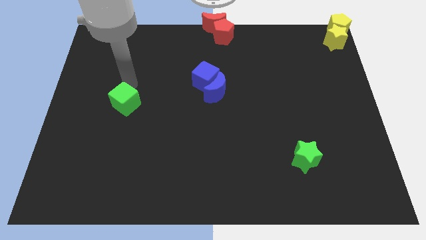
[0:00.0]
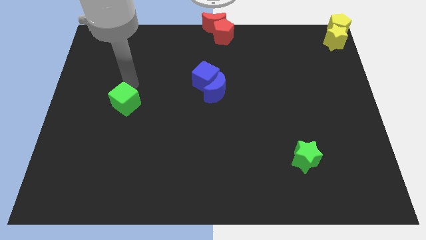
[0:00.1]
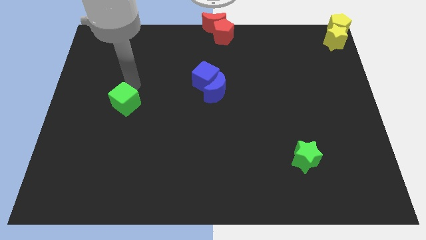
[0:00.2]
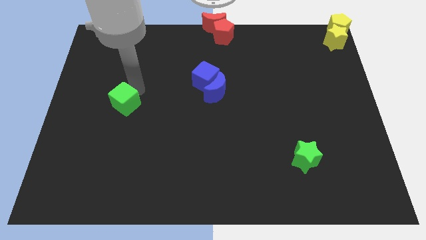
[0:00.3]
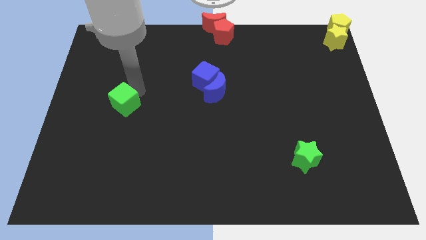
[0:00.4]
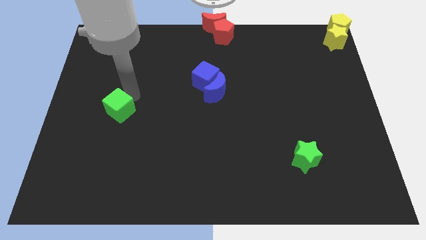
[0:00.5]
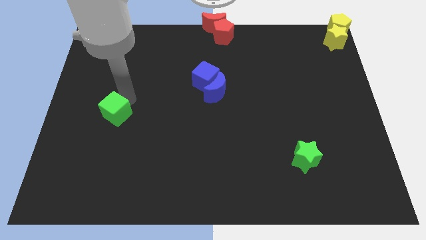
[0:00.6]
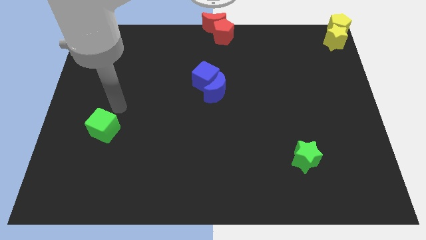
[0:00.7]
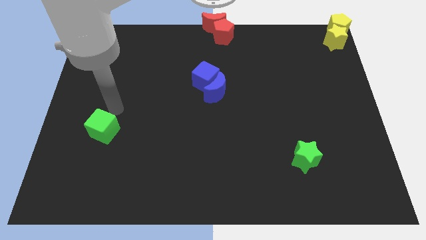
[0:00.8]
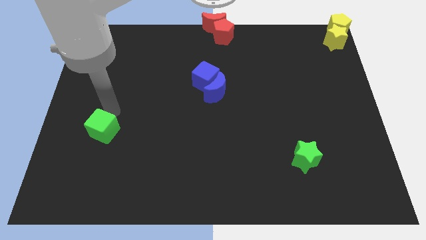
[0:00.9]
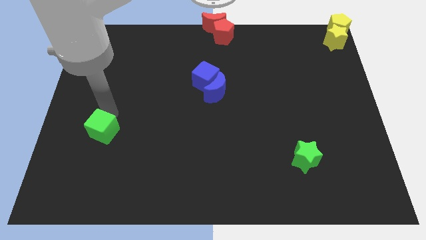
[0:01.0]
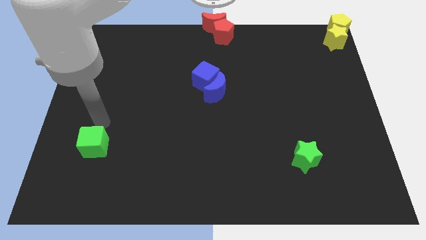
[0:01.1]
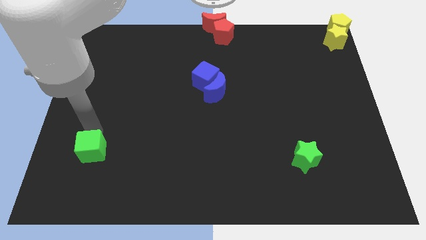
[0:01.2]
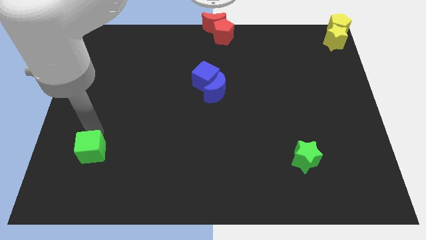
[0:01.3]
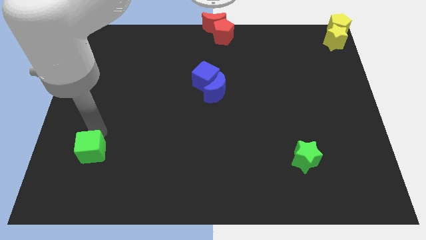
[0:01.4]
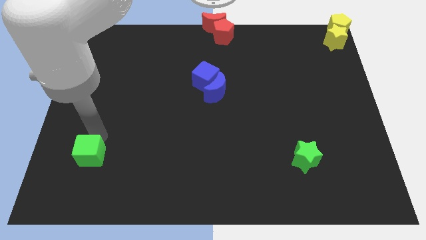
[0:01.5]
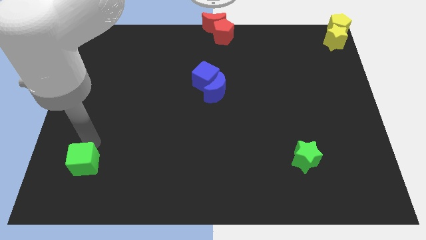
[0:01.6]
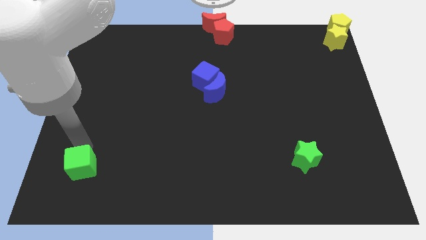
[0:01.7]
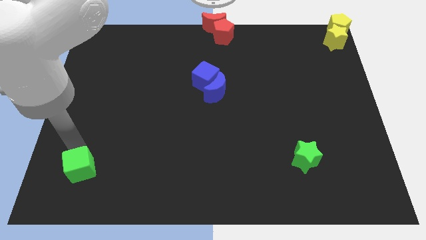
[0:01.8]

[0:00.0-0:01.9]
push the green cube to the bottom left of the board

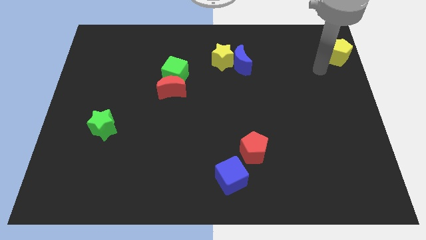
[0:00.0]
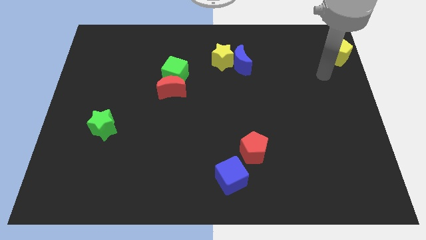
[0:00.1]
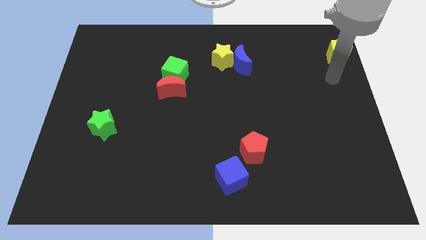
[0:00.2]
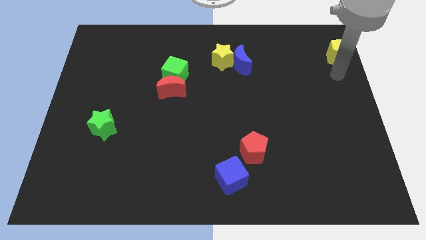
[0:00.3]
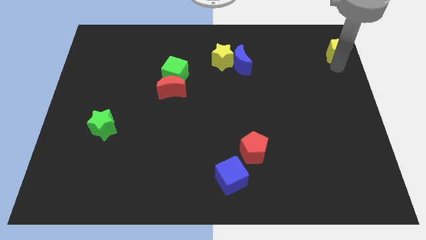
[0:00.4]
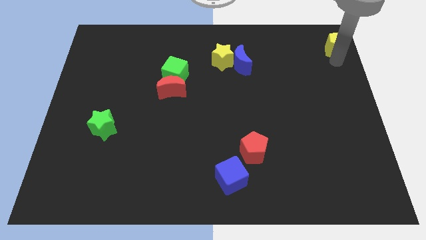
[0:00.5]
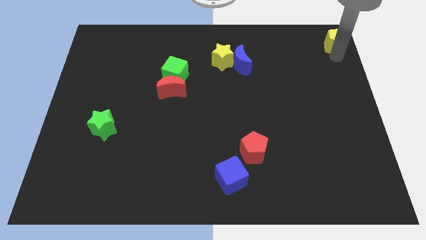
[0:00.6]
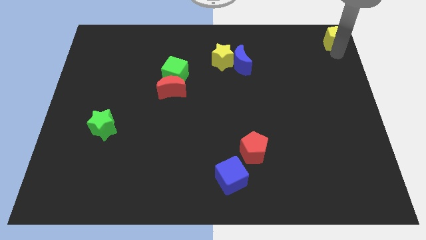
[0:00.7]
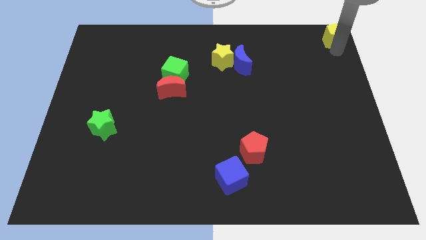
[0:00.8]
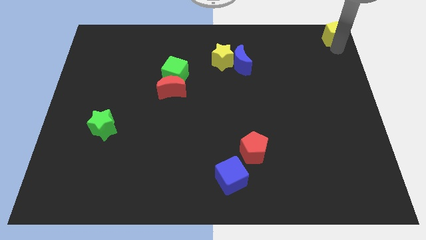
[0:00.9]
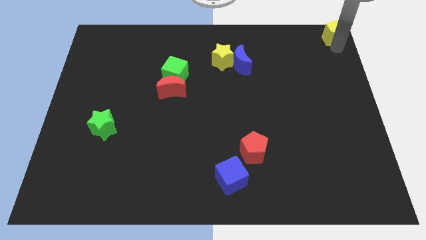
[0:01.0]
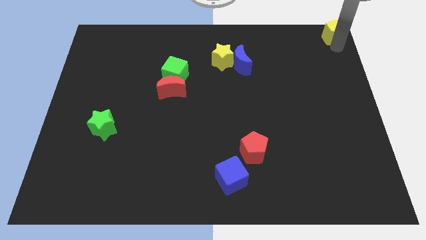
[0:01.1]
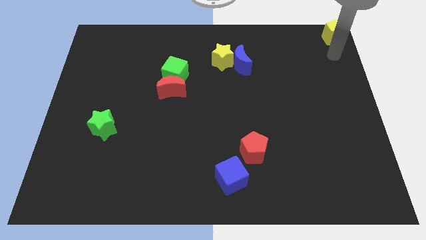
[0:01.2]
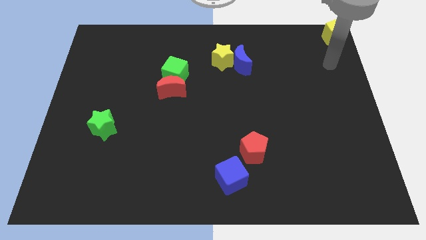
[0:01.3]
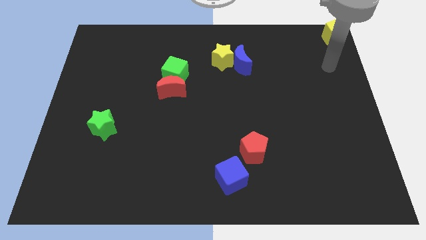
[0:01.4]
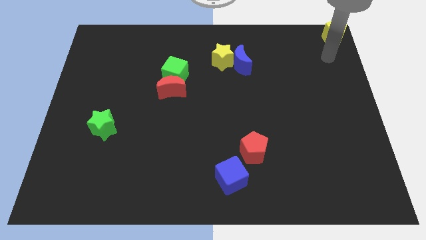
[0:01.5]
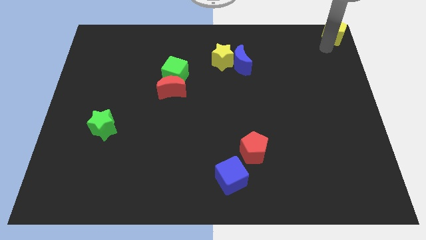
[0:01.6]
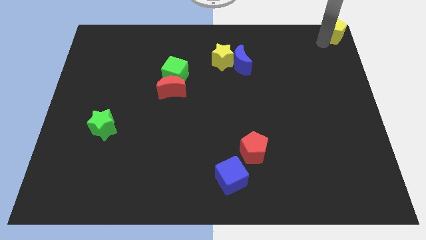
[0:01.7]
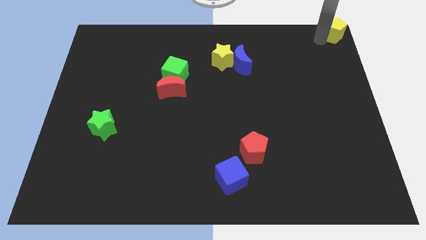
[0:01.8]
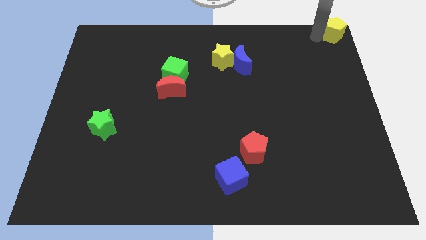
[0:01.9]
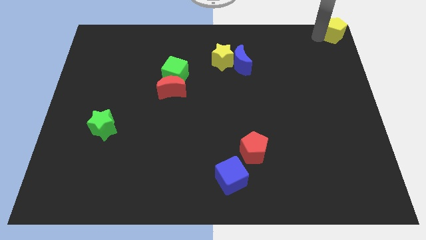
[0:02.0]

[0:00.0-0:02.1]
push yellow pentagon to the top right corner

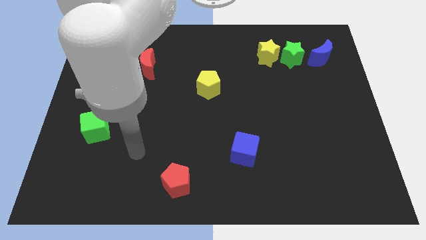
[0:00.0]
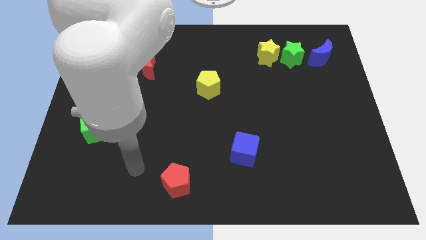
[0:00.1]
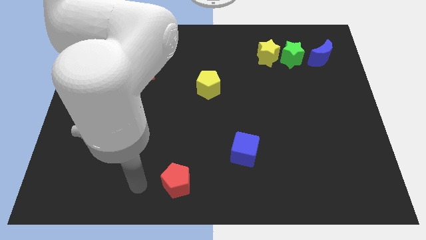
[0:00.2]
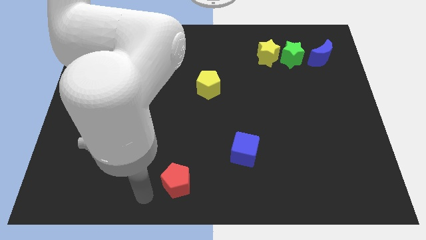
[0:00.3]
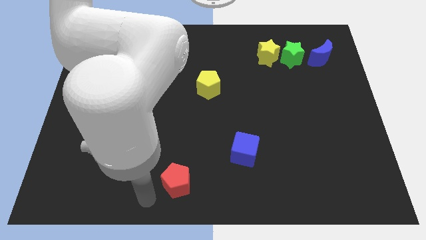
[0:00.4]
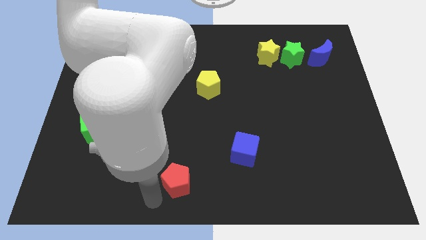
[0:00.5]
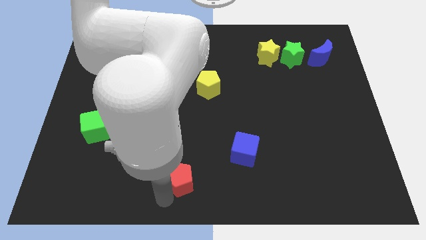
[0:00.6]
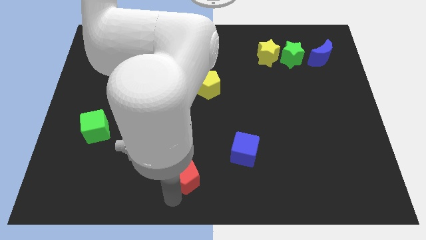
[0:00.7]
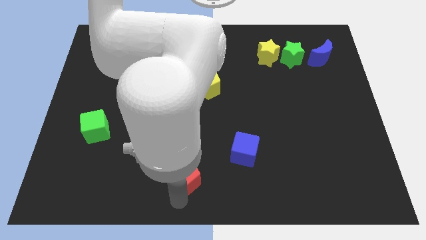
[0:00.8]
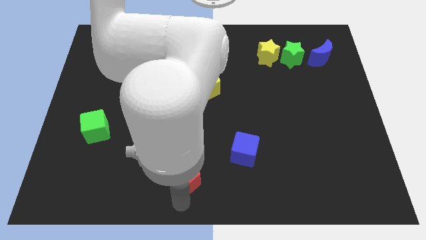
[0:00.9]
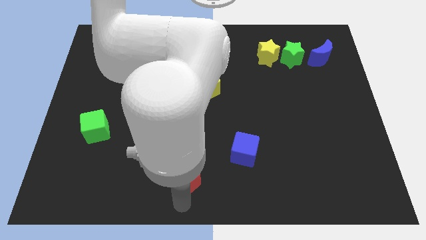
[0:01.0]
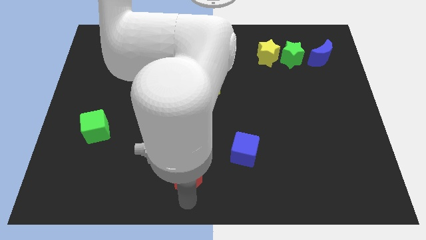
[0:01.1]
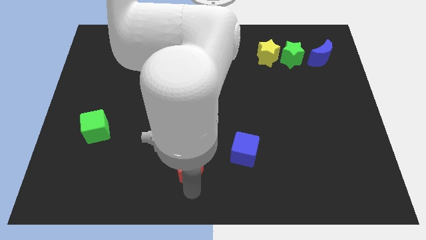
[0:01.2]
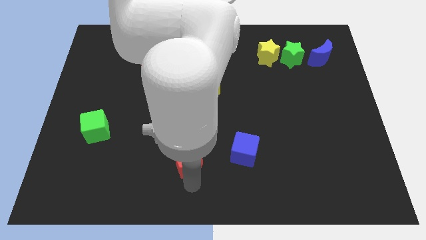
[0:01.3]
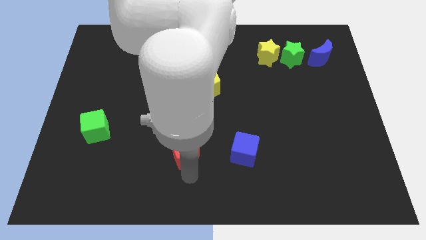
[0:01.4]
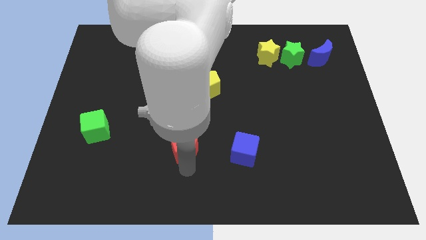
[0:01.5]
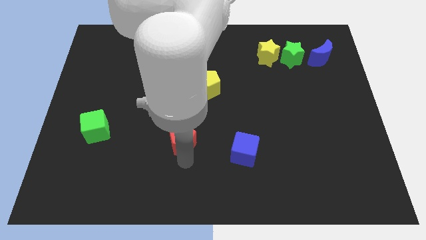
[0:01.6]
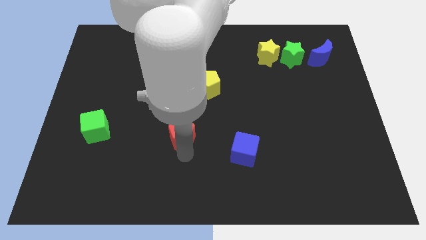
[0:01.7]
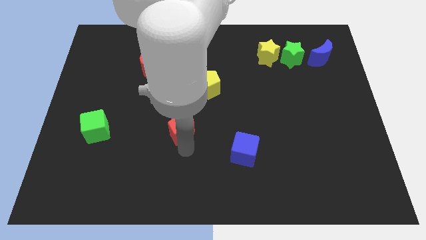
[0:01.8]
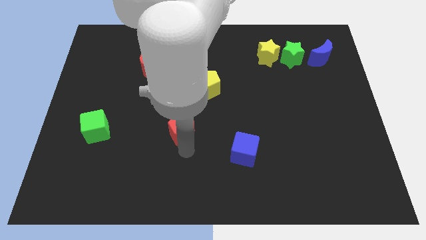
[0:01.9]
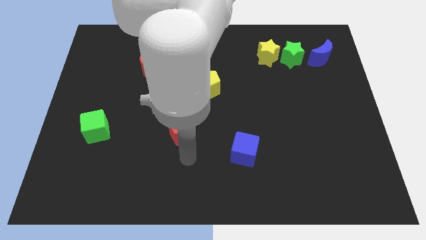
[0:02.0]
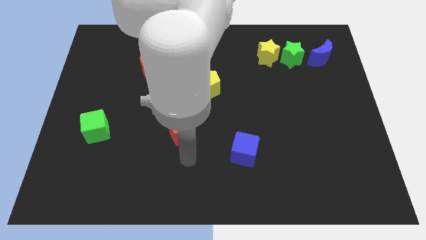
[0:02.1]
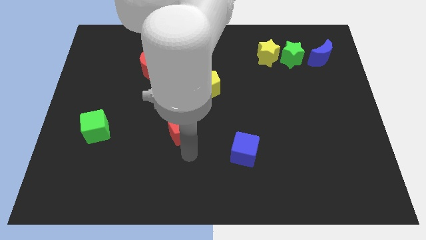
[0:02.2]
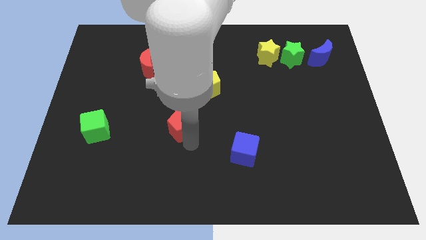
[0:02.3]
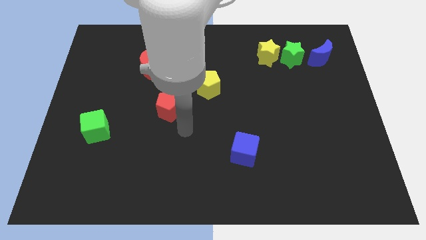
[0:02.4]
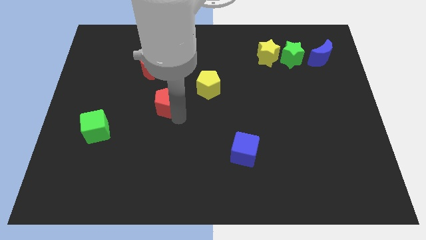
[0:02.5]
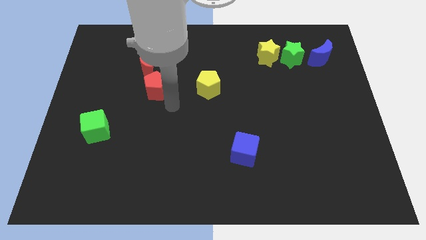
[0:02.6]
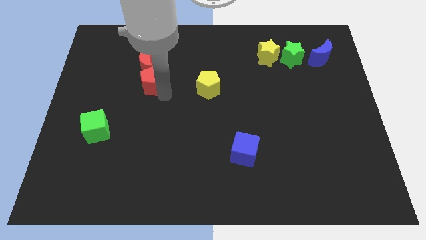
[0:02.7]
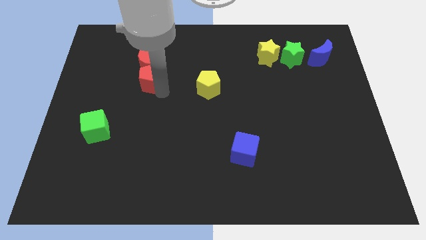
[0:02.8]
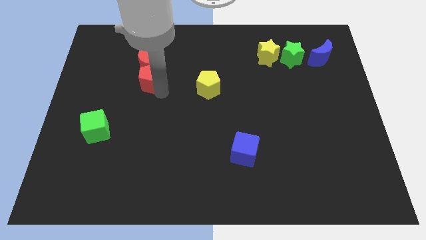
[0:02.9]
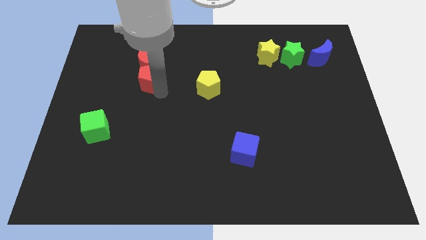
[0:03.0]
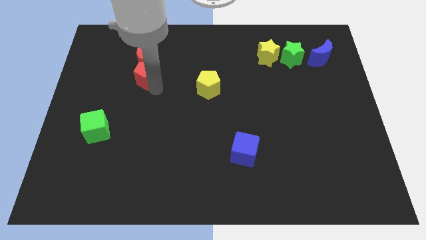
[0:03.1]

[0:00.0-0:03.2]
push the red pentagon into the red moon

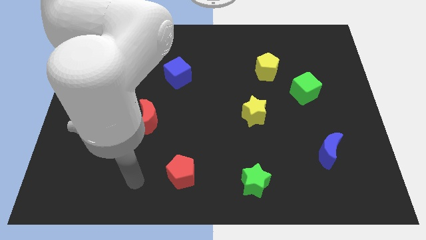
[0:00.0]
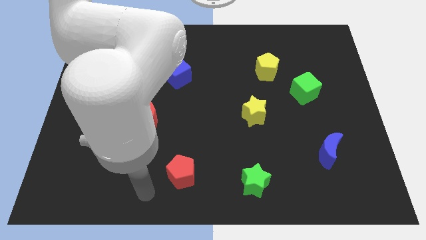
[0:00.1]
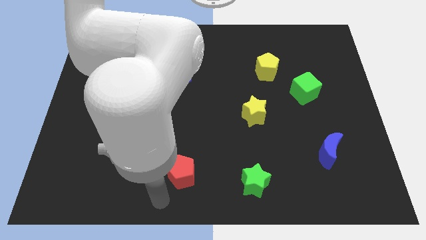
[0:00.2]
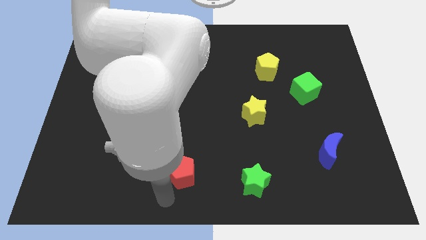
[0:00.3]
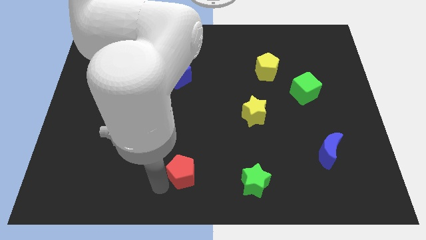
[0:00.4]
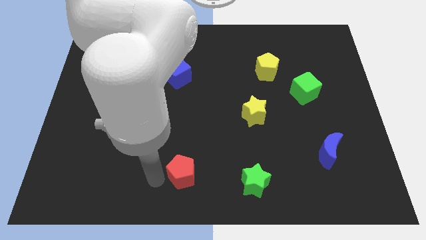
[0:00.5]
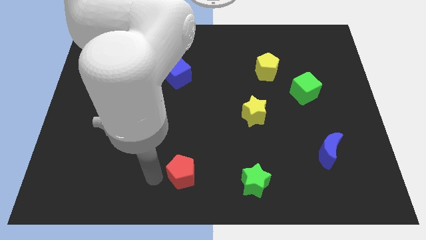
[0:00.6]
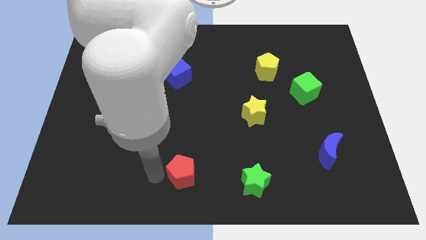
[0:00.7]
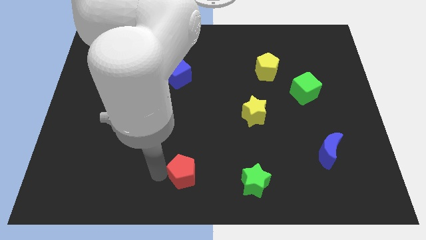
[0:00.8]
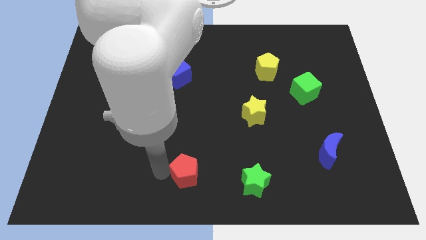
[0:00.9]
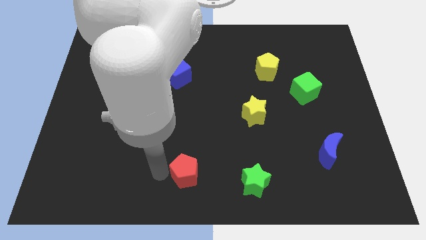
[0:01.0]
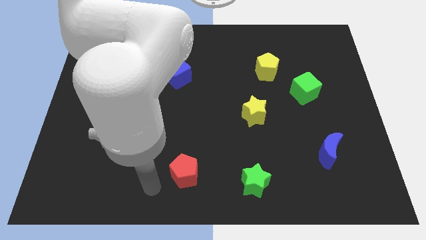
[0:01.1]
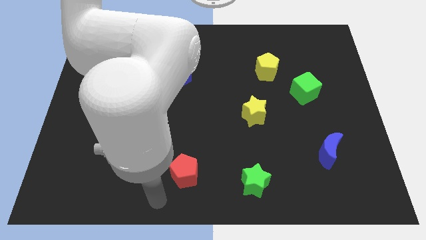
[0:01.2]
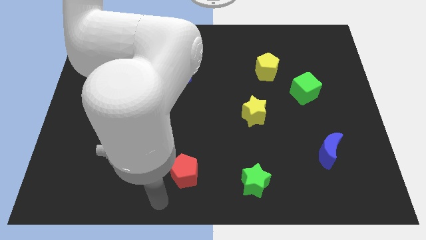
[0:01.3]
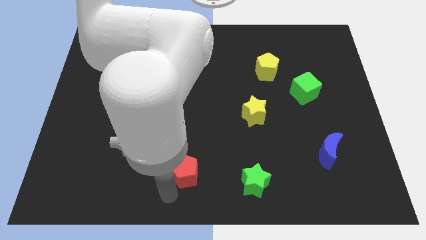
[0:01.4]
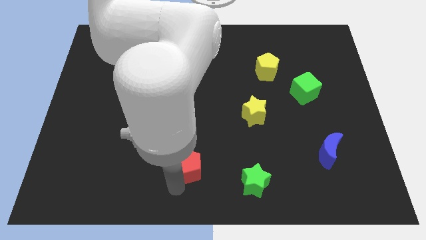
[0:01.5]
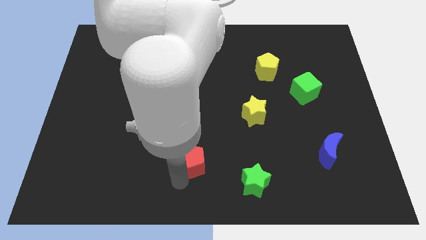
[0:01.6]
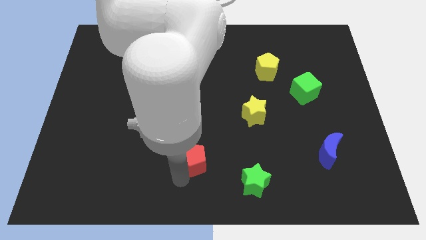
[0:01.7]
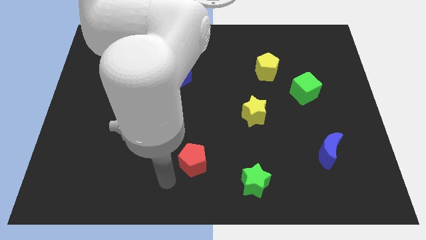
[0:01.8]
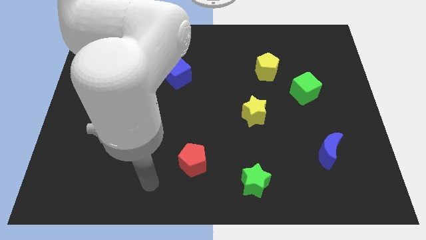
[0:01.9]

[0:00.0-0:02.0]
move red pentagon slightly up
